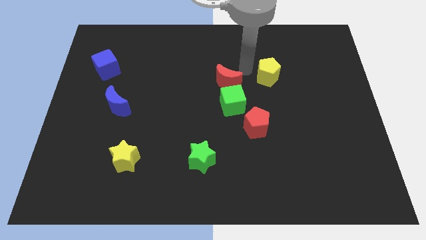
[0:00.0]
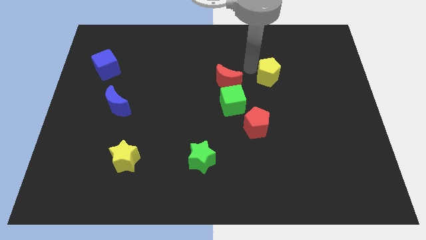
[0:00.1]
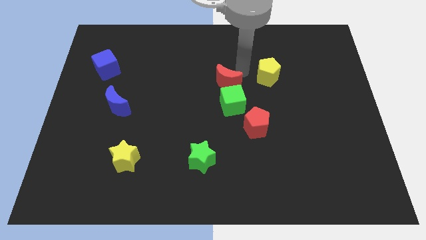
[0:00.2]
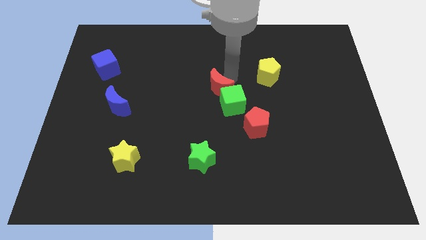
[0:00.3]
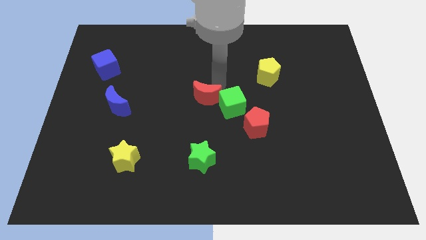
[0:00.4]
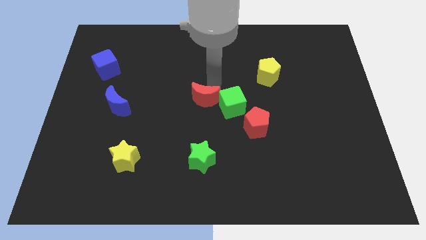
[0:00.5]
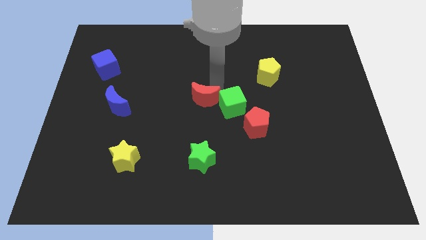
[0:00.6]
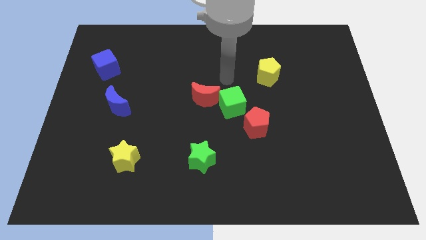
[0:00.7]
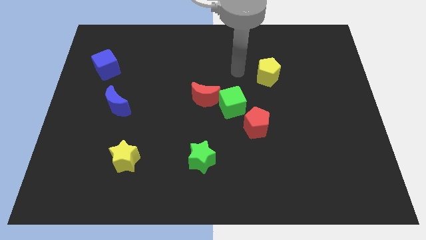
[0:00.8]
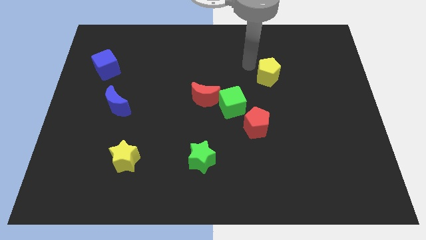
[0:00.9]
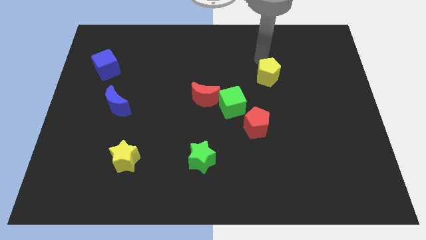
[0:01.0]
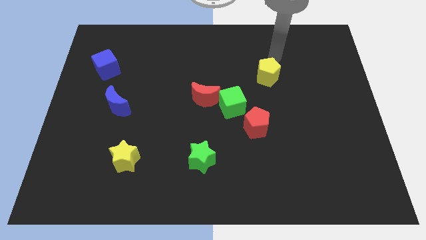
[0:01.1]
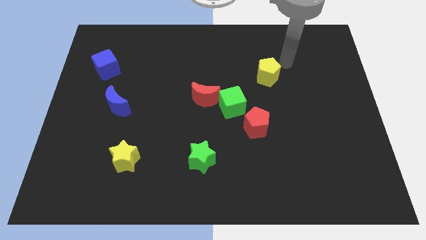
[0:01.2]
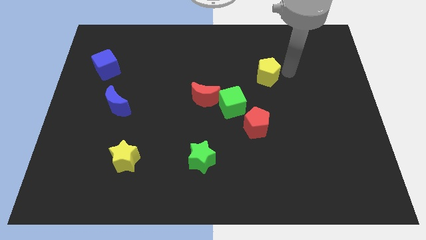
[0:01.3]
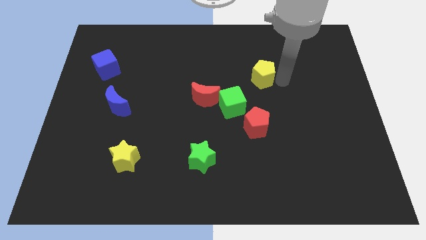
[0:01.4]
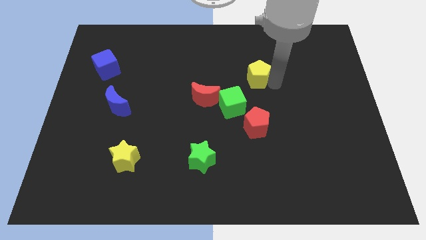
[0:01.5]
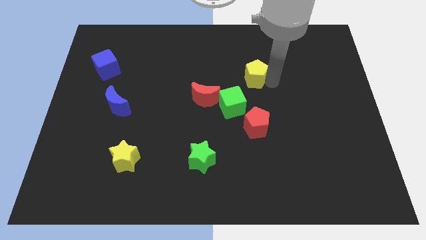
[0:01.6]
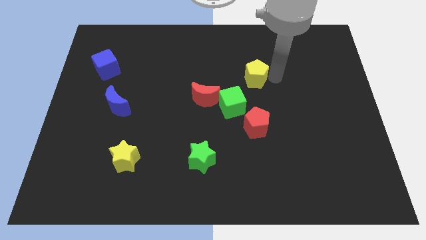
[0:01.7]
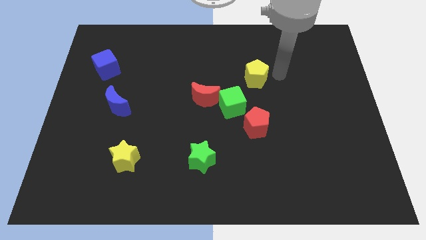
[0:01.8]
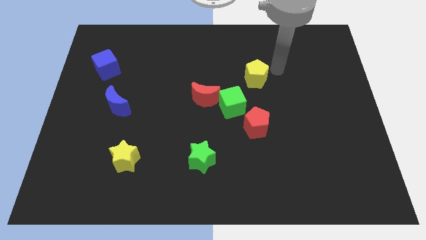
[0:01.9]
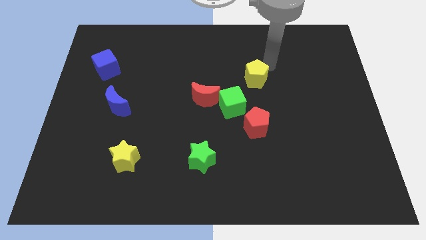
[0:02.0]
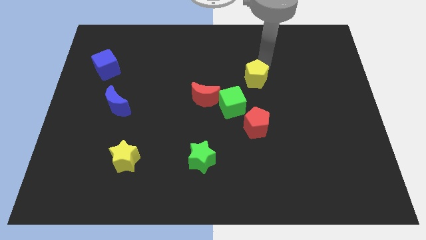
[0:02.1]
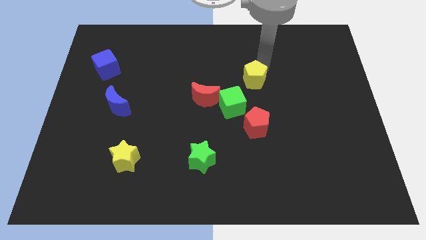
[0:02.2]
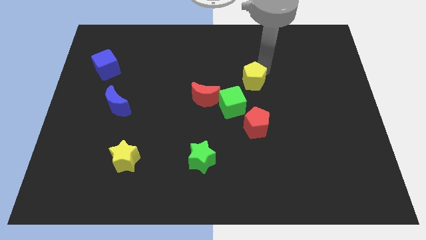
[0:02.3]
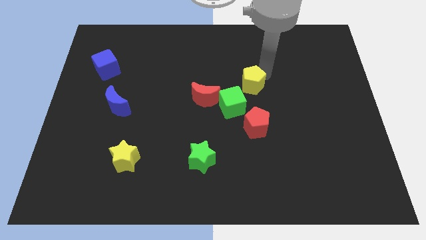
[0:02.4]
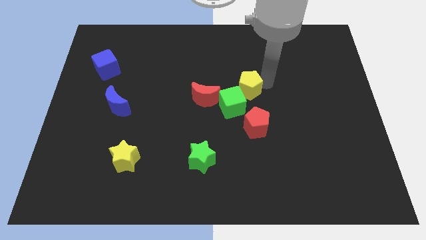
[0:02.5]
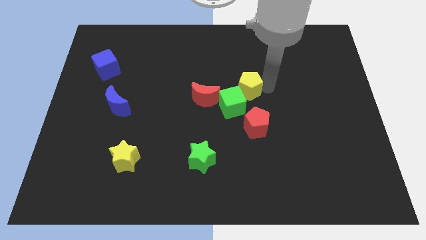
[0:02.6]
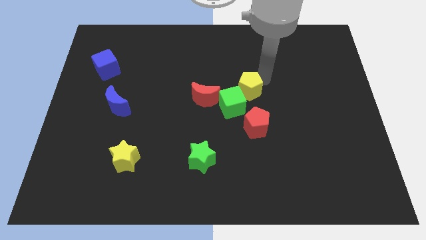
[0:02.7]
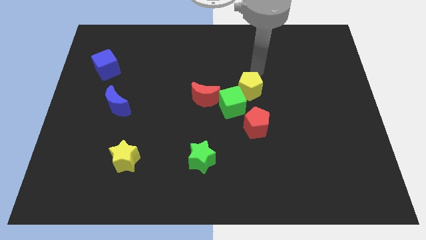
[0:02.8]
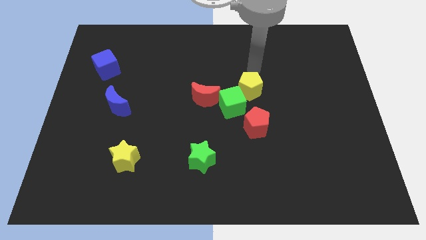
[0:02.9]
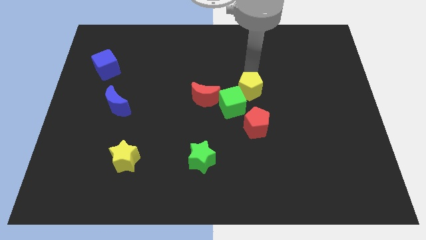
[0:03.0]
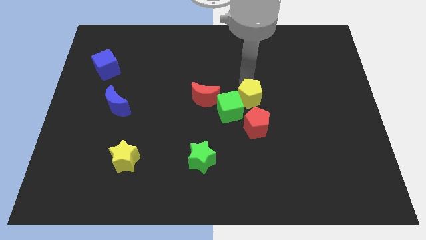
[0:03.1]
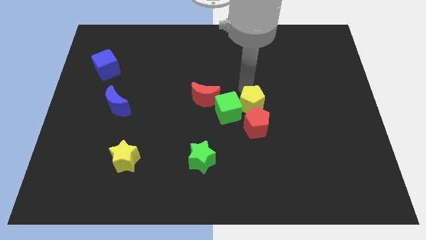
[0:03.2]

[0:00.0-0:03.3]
push the yellow pentagon into green cube

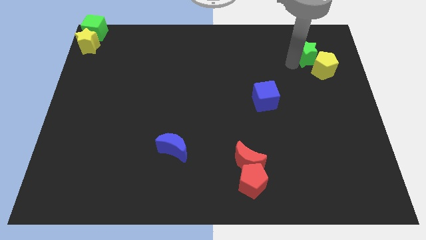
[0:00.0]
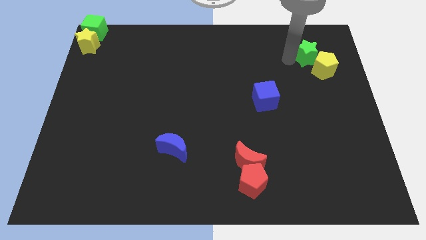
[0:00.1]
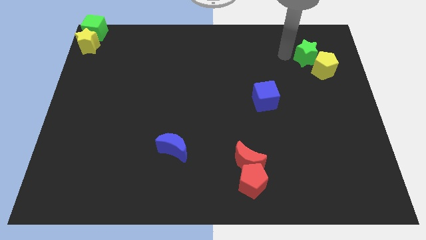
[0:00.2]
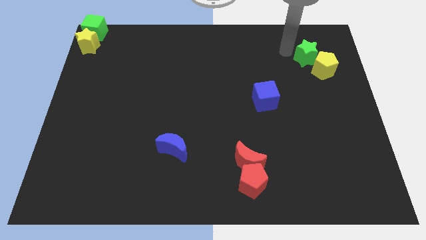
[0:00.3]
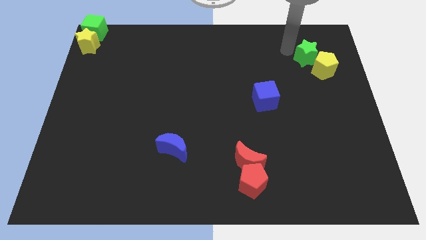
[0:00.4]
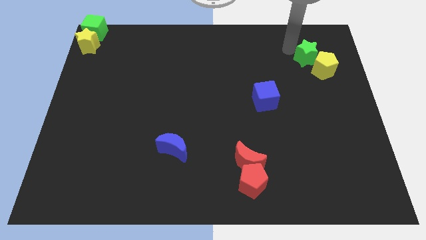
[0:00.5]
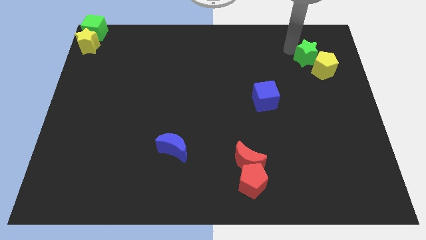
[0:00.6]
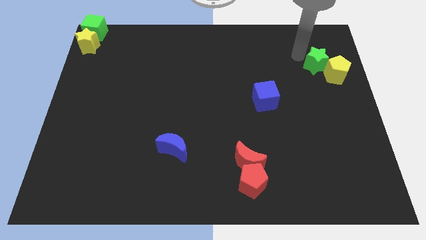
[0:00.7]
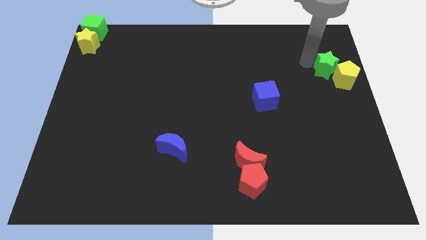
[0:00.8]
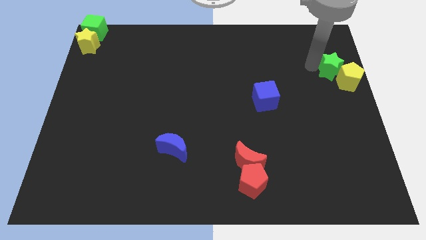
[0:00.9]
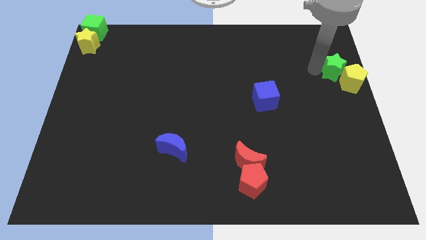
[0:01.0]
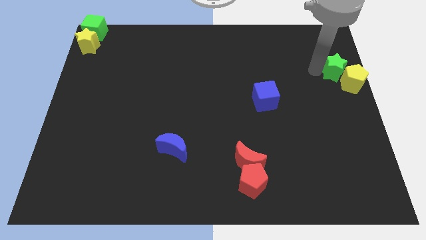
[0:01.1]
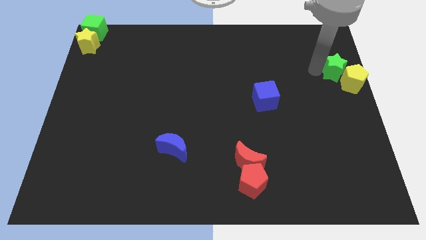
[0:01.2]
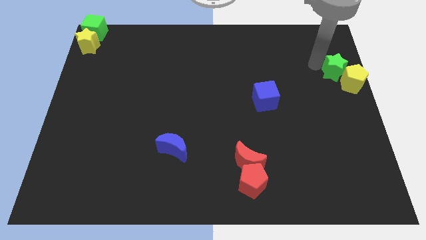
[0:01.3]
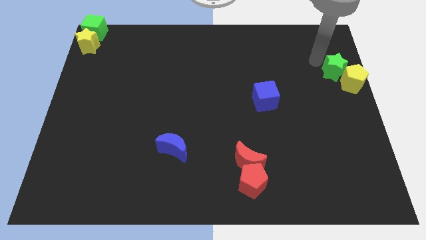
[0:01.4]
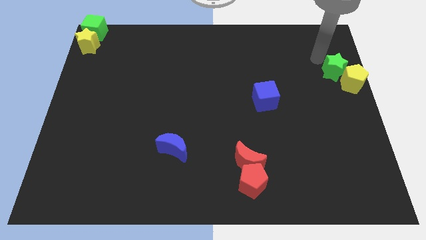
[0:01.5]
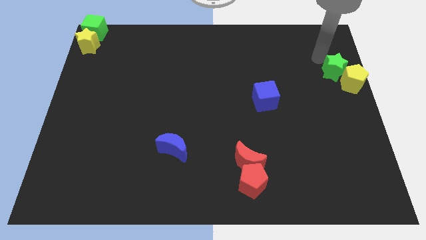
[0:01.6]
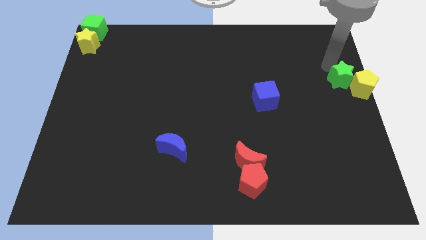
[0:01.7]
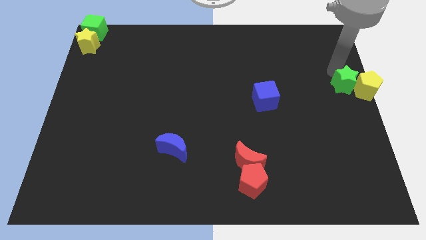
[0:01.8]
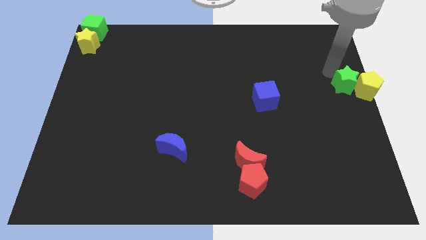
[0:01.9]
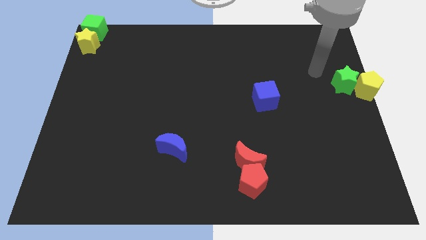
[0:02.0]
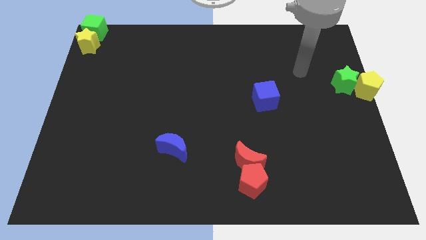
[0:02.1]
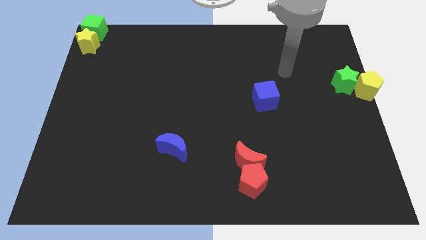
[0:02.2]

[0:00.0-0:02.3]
place the green star and yellow pentagon to the right of blue cube

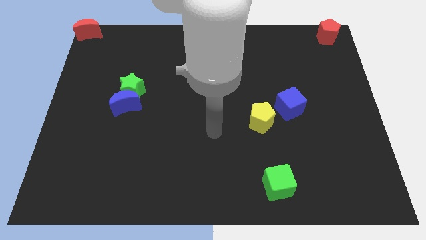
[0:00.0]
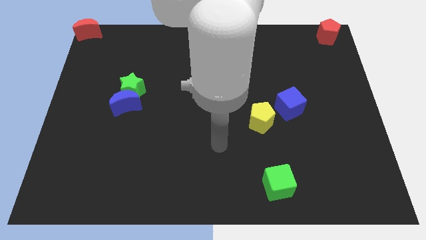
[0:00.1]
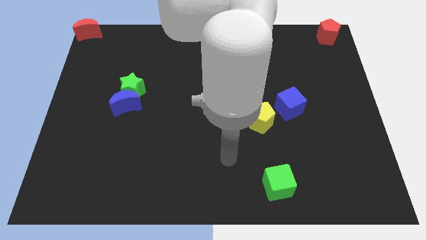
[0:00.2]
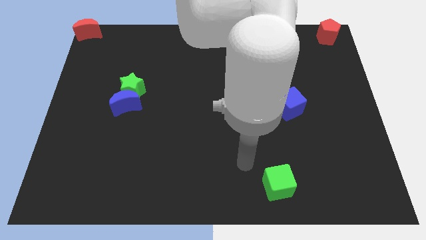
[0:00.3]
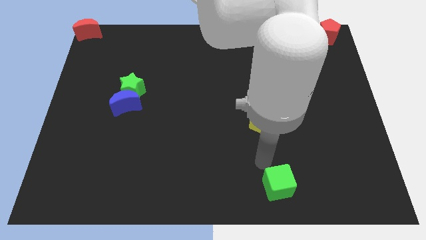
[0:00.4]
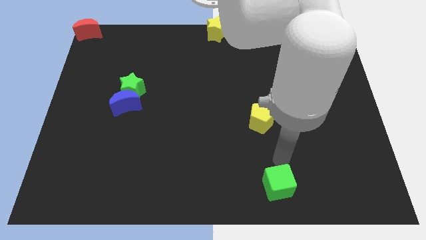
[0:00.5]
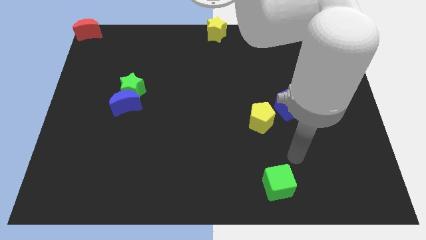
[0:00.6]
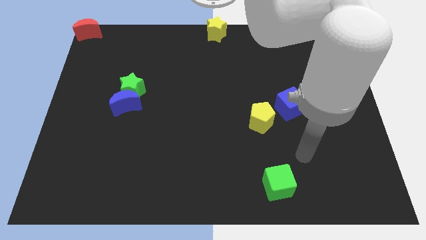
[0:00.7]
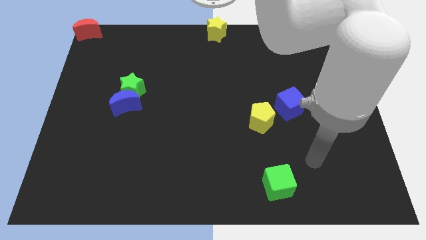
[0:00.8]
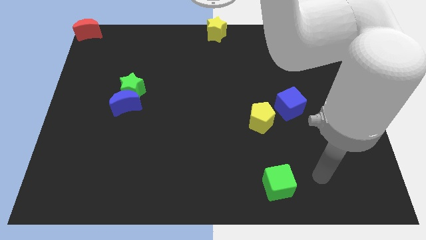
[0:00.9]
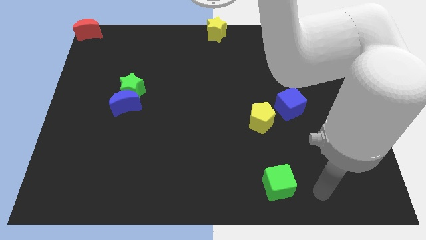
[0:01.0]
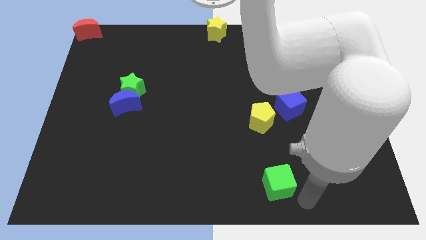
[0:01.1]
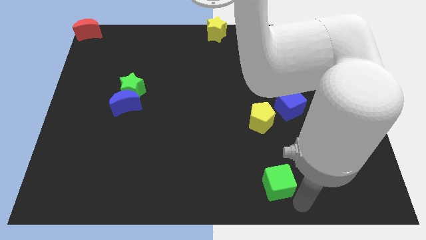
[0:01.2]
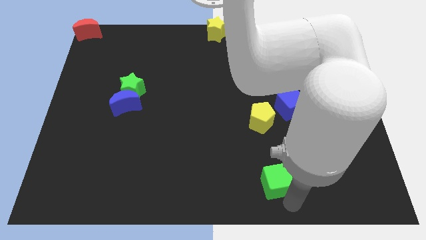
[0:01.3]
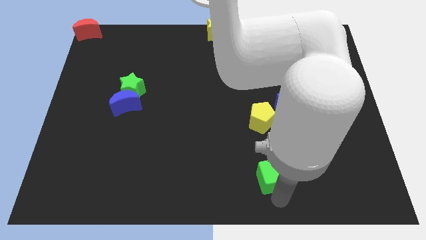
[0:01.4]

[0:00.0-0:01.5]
touch the green cube with your arm

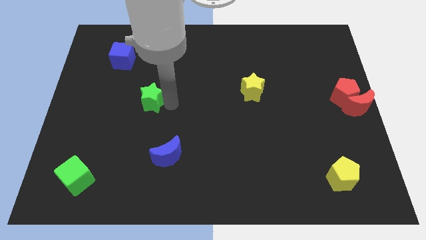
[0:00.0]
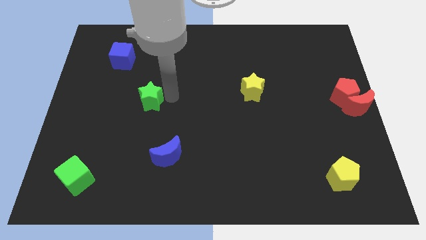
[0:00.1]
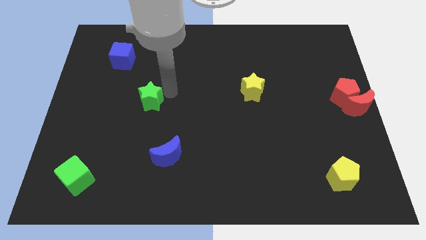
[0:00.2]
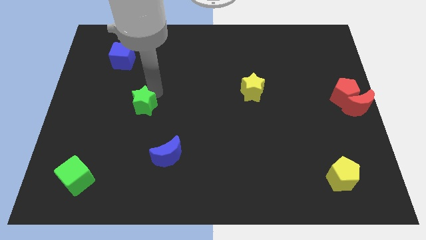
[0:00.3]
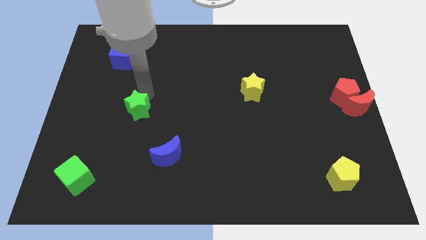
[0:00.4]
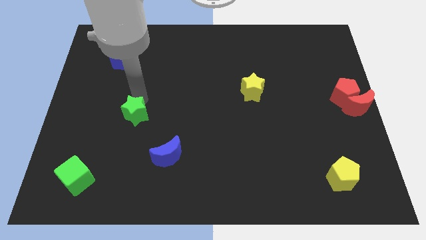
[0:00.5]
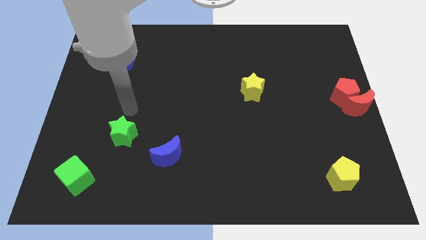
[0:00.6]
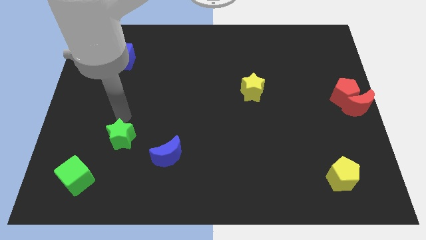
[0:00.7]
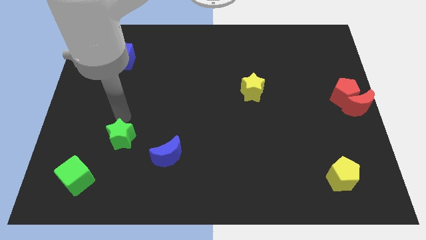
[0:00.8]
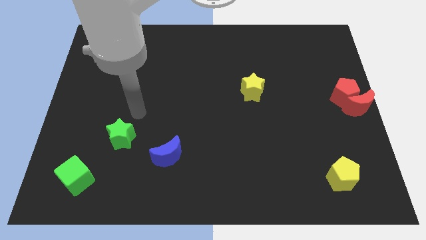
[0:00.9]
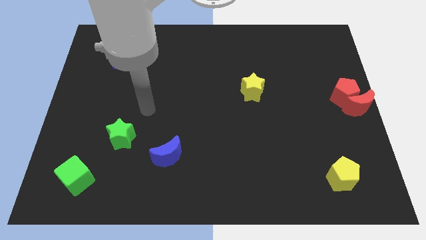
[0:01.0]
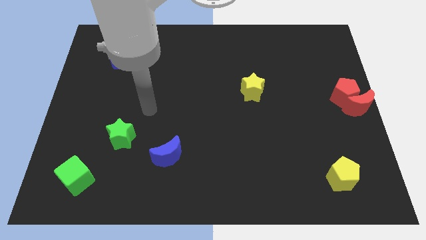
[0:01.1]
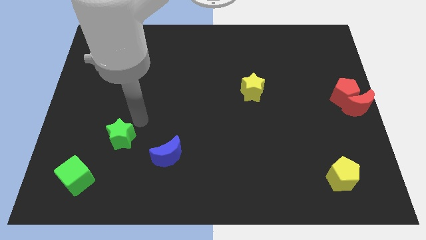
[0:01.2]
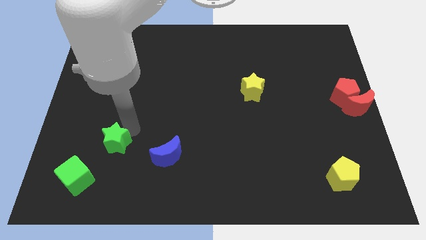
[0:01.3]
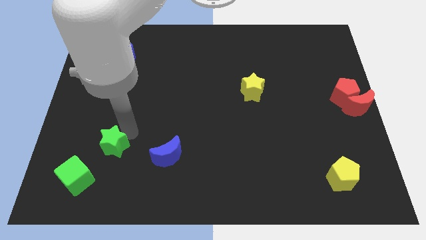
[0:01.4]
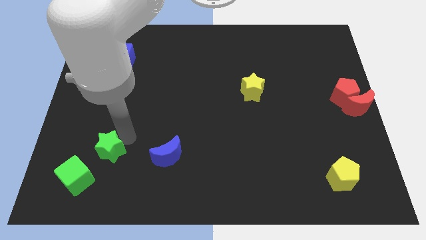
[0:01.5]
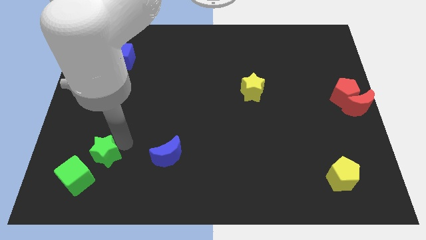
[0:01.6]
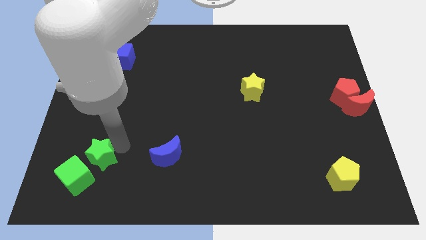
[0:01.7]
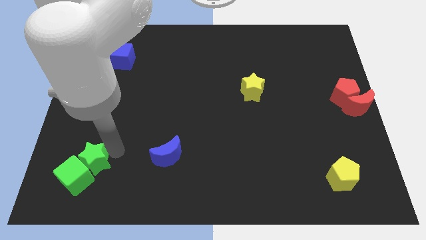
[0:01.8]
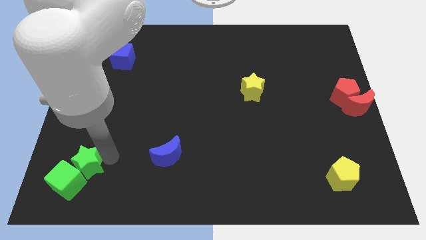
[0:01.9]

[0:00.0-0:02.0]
push the green star into green cube
